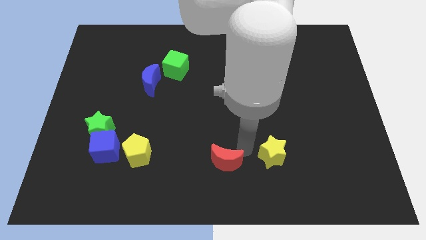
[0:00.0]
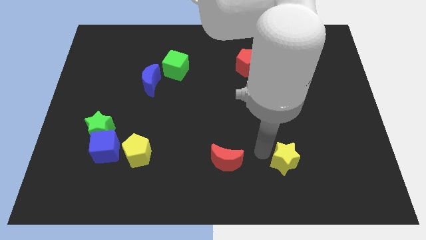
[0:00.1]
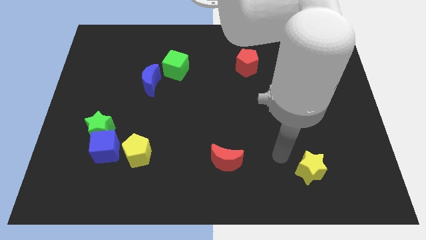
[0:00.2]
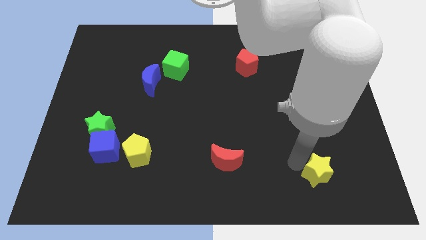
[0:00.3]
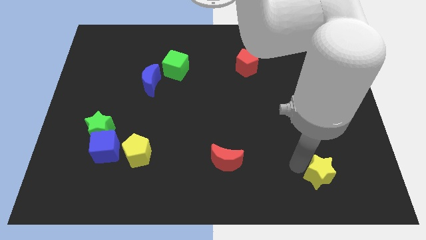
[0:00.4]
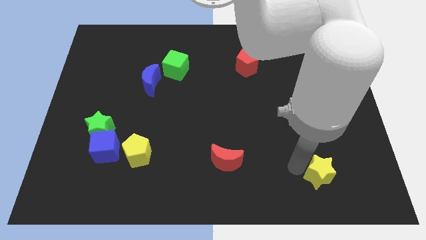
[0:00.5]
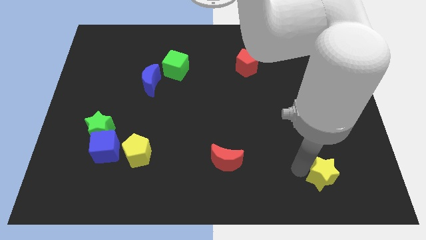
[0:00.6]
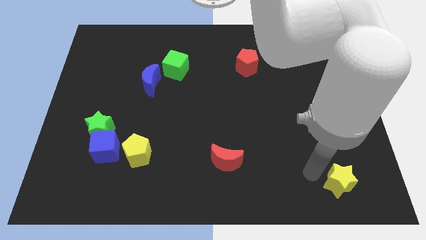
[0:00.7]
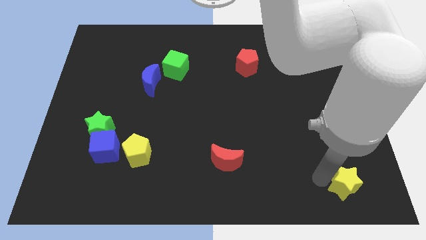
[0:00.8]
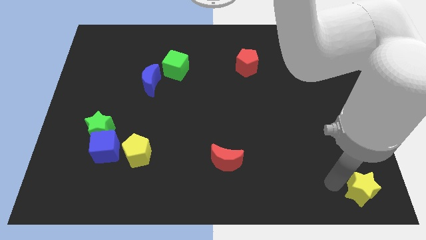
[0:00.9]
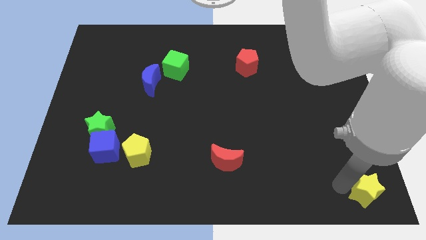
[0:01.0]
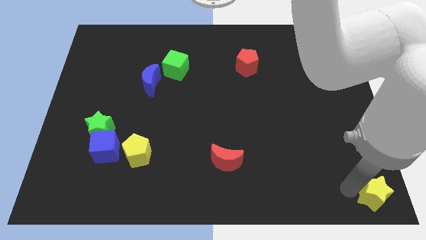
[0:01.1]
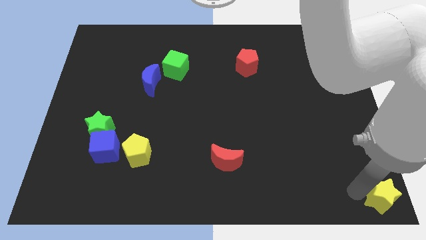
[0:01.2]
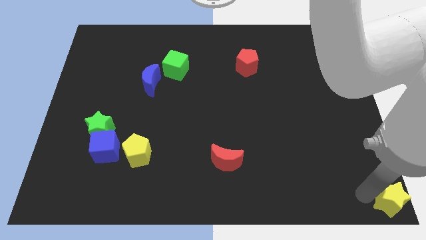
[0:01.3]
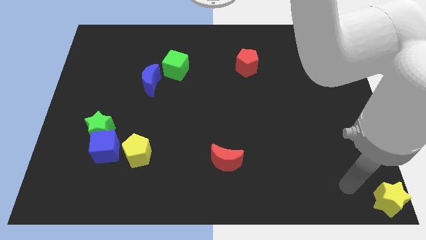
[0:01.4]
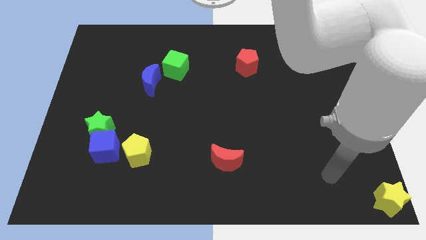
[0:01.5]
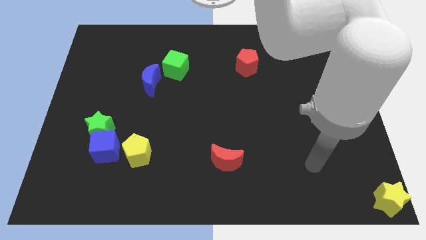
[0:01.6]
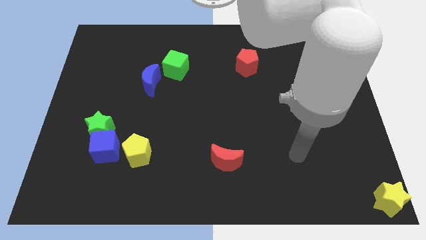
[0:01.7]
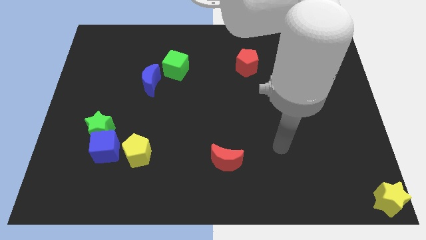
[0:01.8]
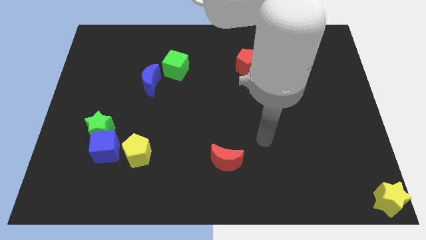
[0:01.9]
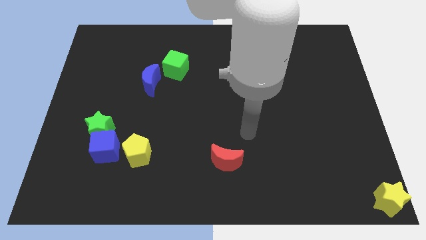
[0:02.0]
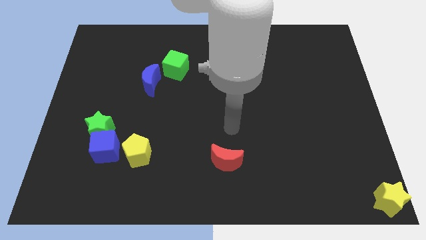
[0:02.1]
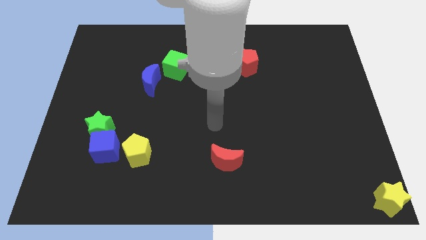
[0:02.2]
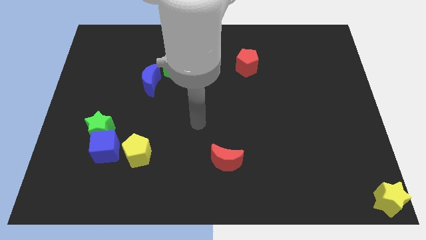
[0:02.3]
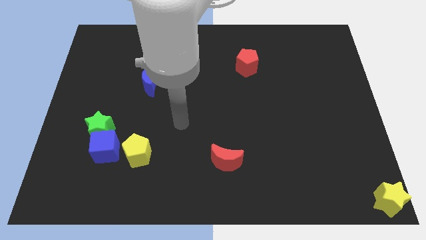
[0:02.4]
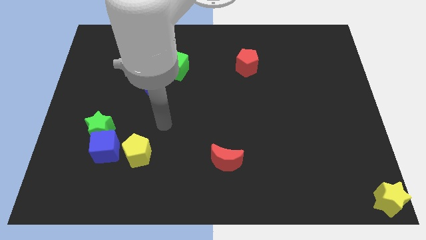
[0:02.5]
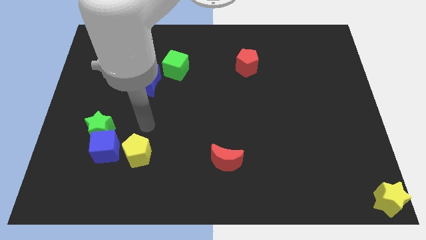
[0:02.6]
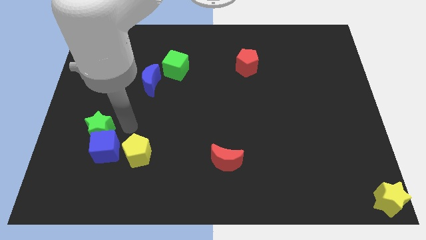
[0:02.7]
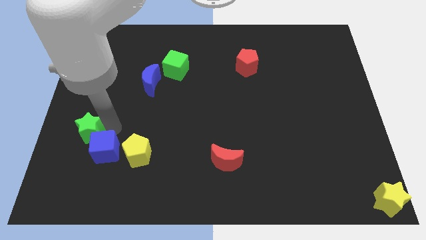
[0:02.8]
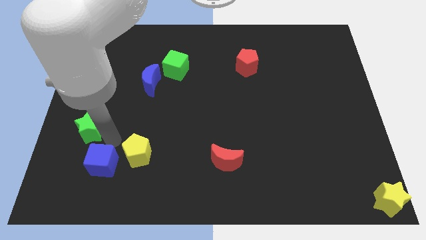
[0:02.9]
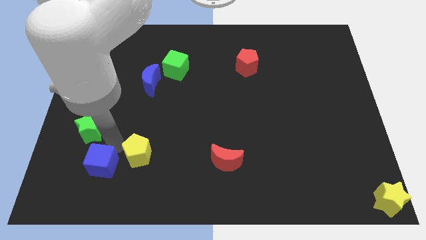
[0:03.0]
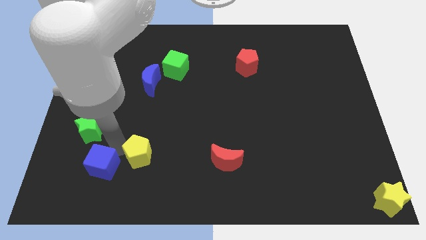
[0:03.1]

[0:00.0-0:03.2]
place the yellow star to the bottom right of the board

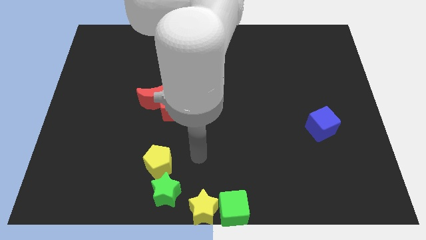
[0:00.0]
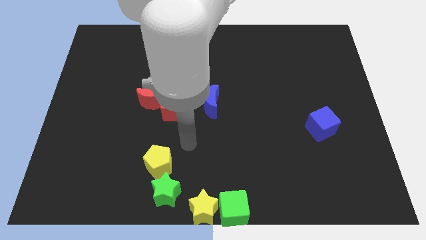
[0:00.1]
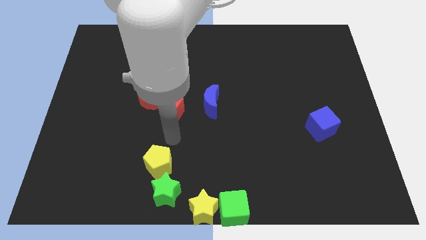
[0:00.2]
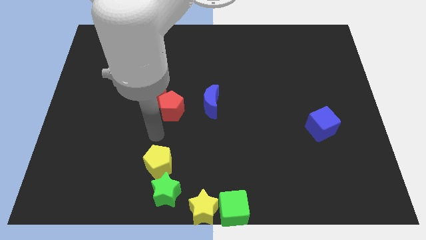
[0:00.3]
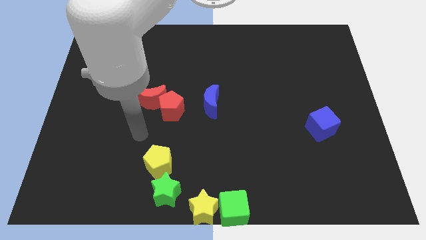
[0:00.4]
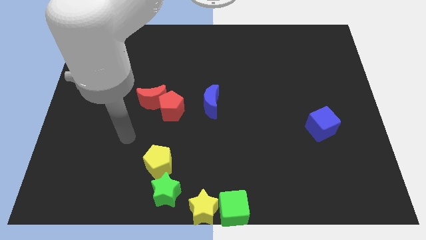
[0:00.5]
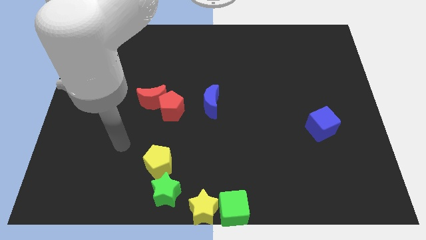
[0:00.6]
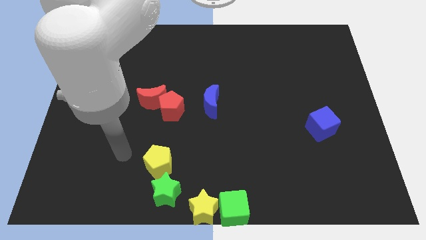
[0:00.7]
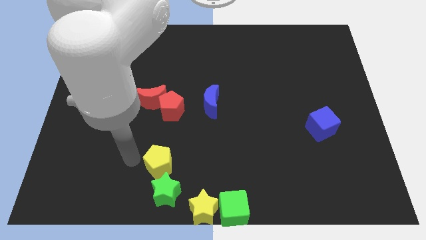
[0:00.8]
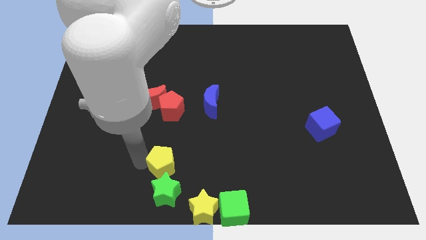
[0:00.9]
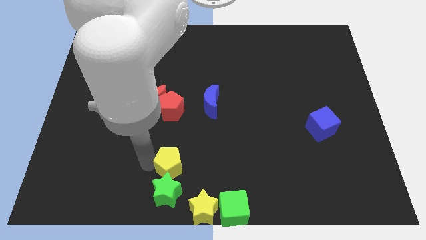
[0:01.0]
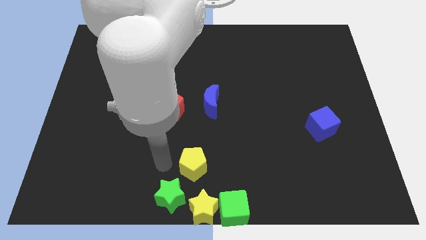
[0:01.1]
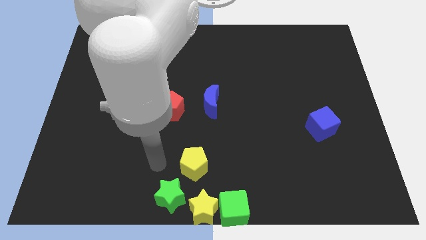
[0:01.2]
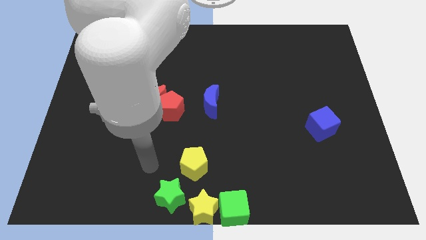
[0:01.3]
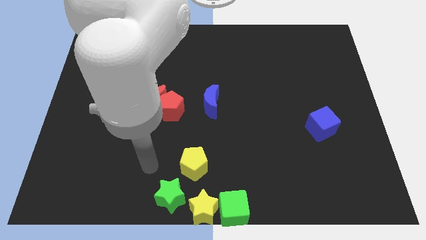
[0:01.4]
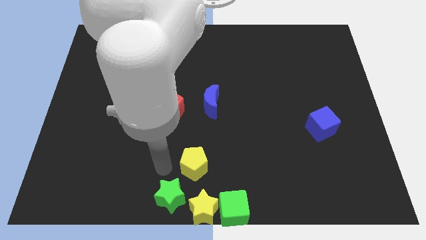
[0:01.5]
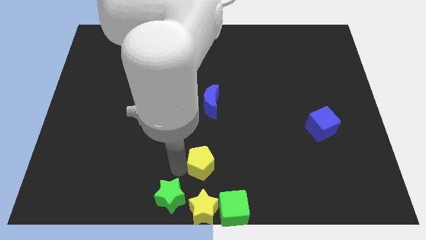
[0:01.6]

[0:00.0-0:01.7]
move yellow pentagon to the top side of the yellow star

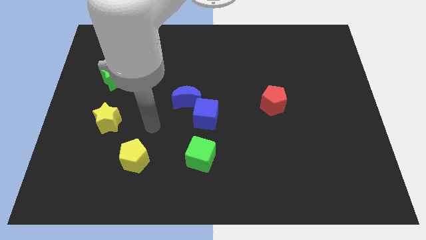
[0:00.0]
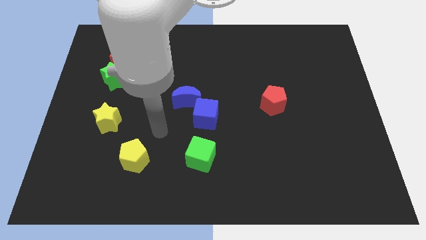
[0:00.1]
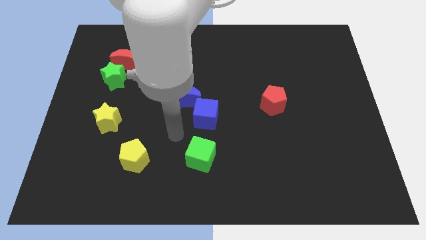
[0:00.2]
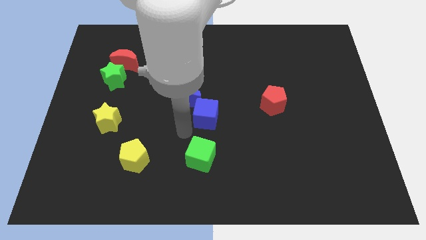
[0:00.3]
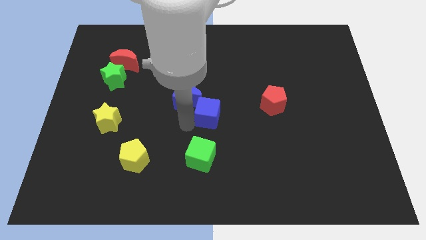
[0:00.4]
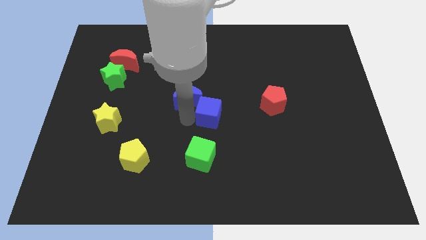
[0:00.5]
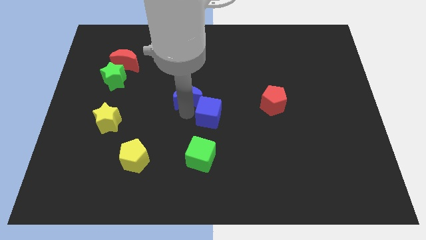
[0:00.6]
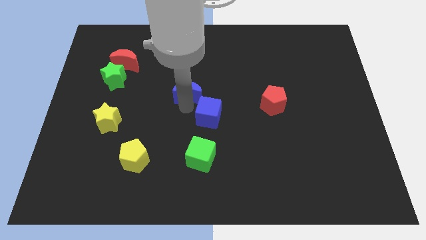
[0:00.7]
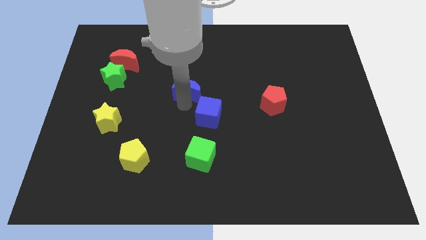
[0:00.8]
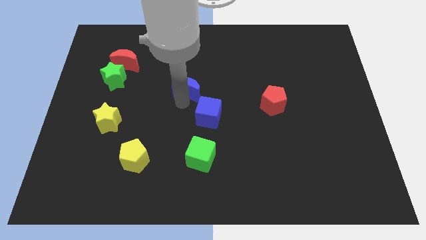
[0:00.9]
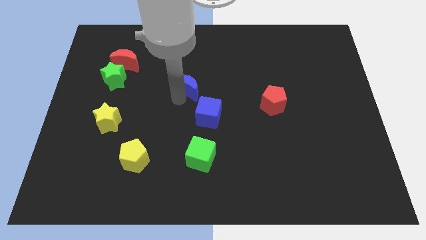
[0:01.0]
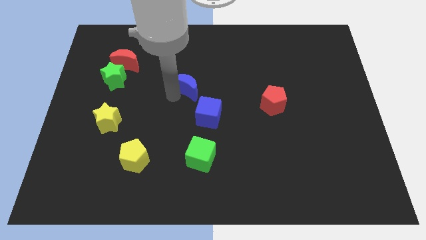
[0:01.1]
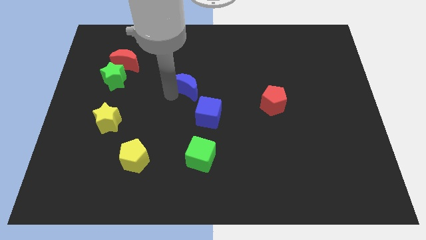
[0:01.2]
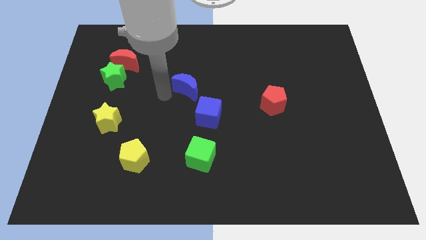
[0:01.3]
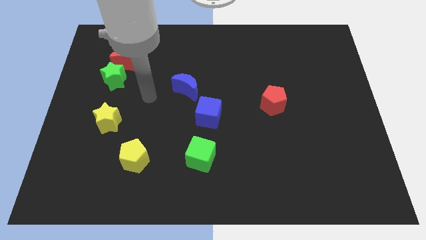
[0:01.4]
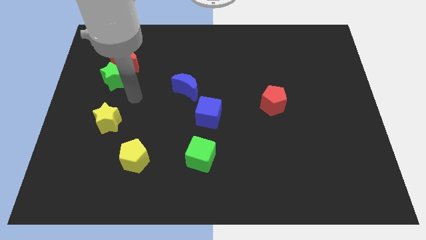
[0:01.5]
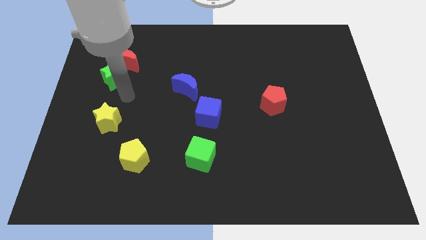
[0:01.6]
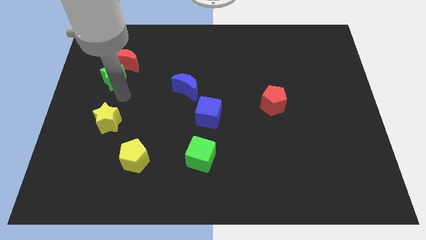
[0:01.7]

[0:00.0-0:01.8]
separate the blue moon and blue cube

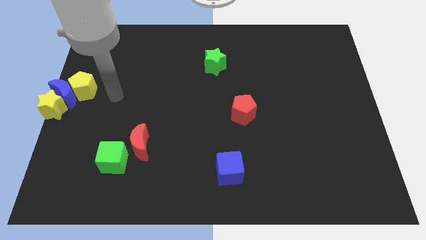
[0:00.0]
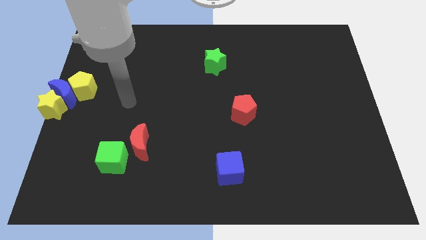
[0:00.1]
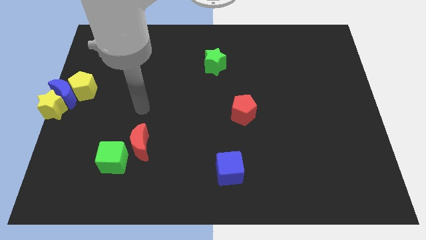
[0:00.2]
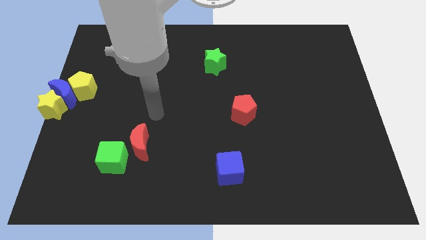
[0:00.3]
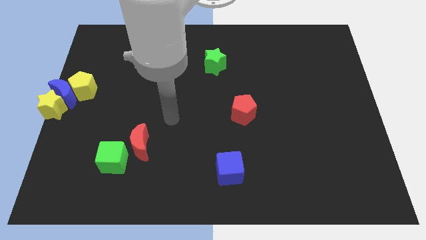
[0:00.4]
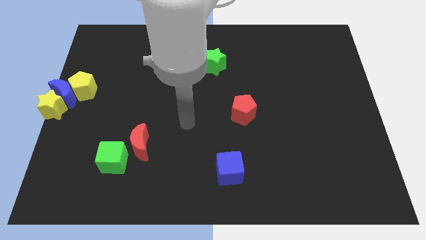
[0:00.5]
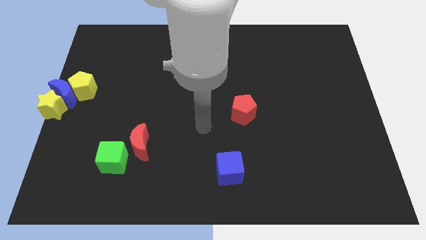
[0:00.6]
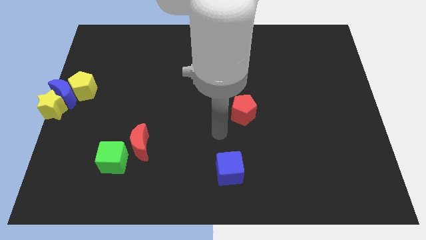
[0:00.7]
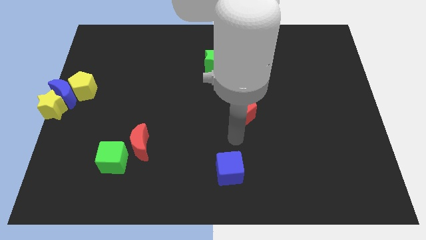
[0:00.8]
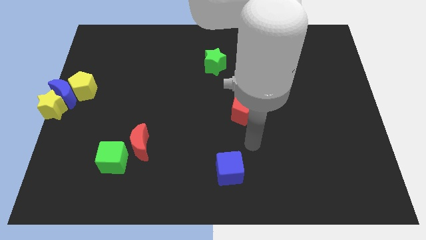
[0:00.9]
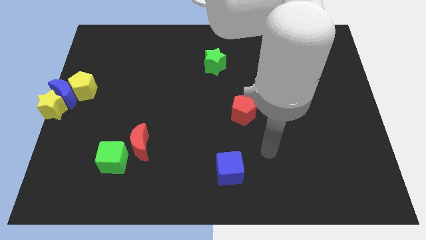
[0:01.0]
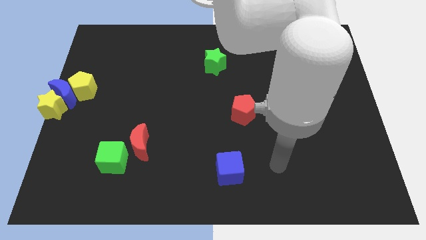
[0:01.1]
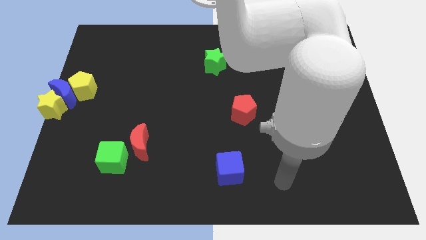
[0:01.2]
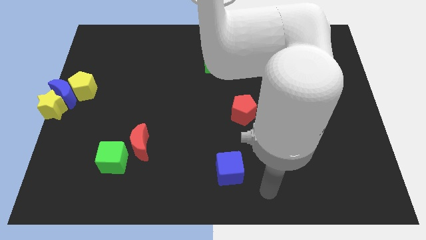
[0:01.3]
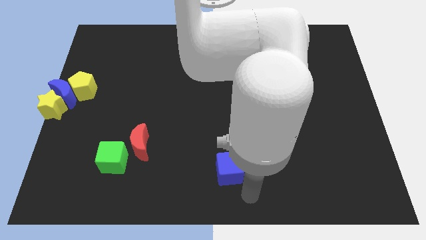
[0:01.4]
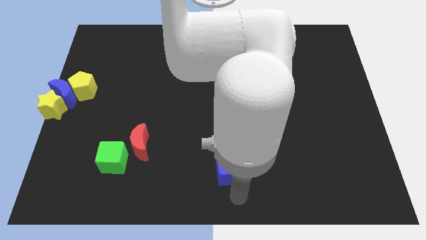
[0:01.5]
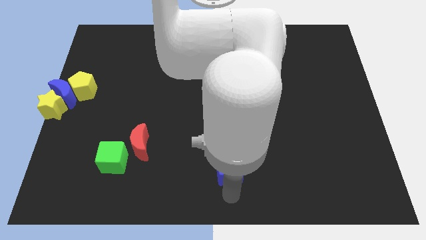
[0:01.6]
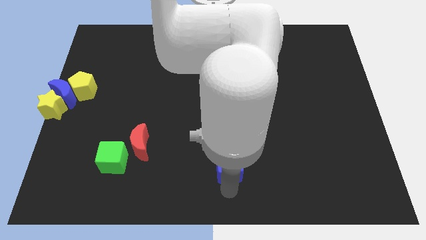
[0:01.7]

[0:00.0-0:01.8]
move your arm to the bottom of the blue cube

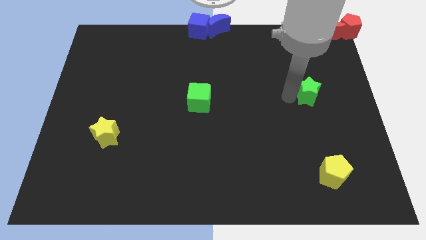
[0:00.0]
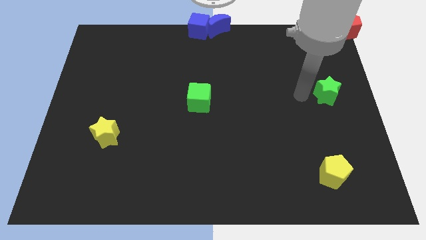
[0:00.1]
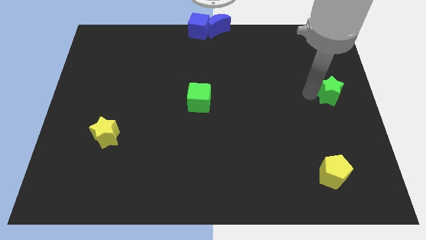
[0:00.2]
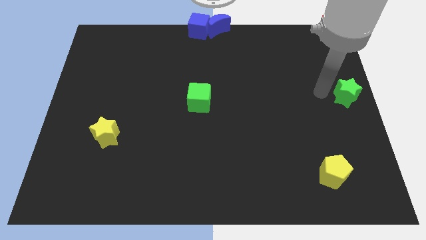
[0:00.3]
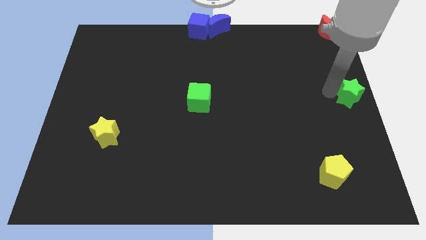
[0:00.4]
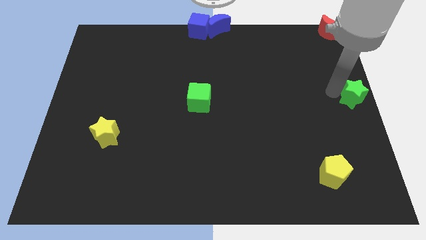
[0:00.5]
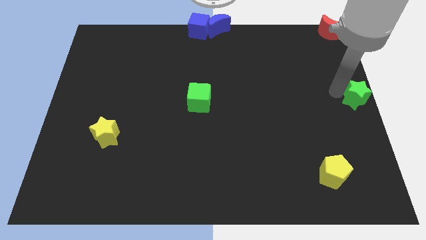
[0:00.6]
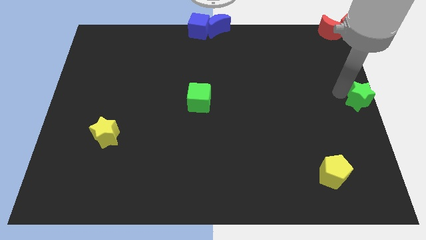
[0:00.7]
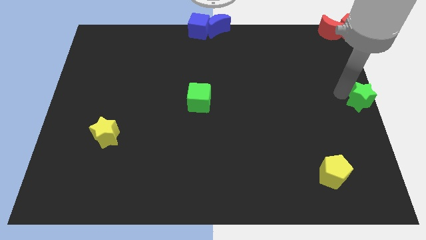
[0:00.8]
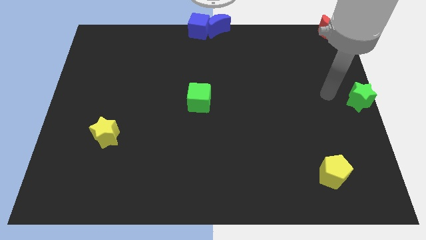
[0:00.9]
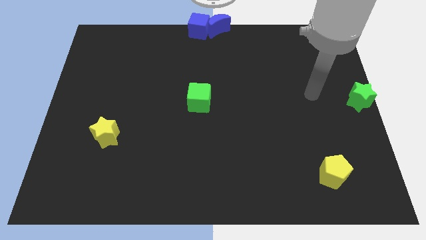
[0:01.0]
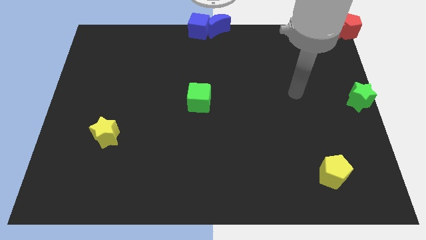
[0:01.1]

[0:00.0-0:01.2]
place the green star at the center right side of the board
